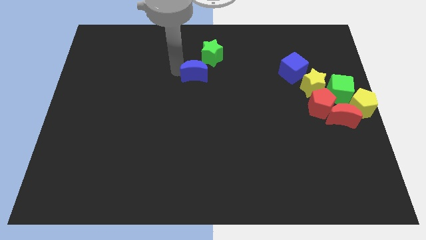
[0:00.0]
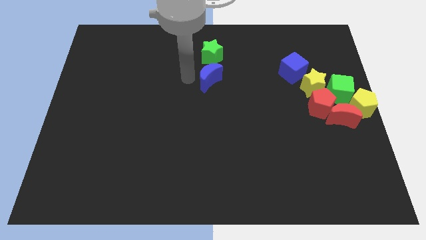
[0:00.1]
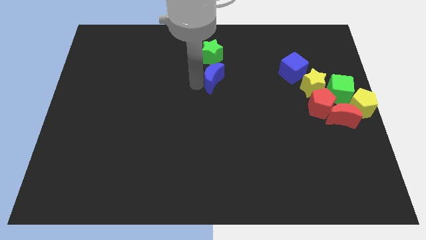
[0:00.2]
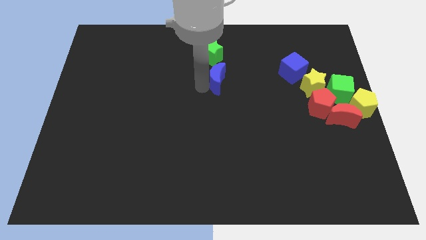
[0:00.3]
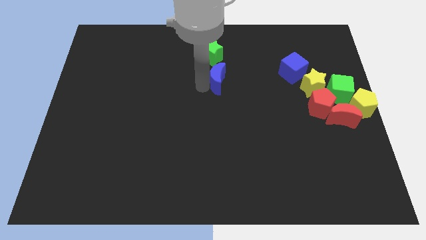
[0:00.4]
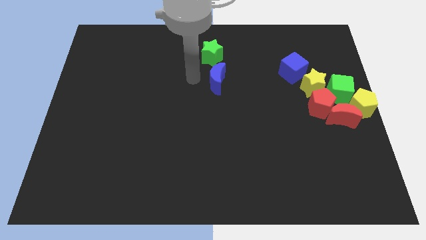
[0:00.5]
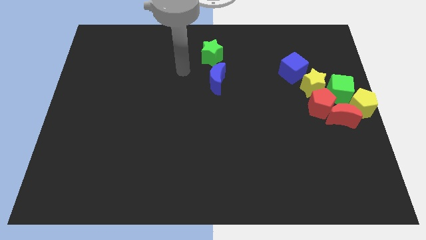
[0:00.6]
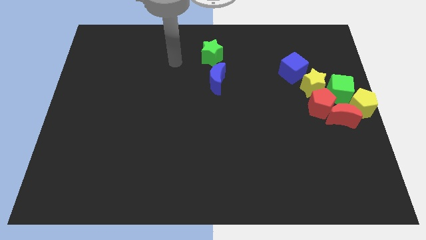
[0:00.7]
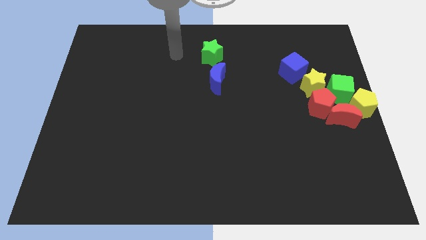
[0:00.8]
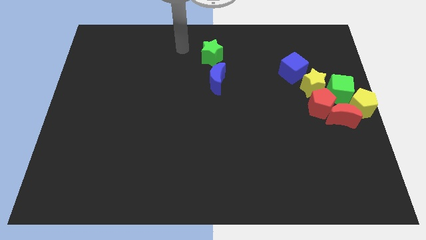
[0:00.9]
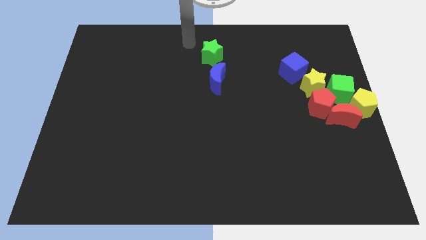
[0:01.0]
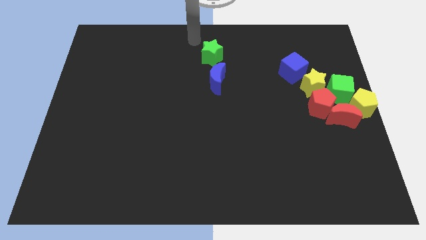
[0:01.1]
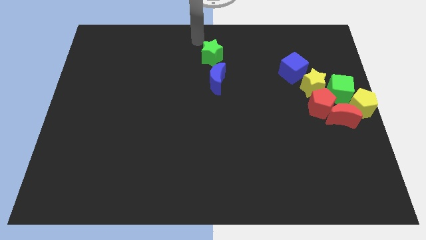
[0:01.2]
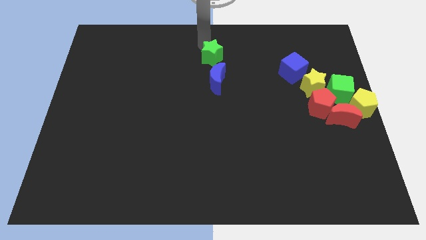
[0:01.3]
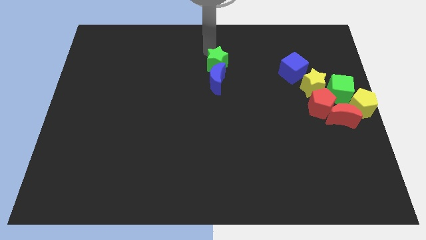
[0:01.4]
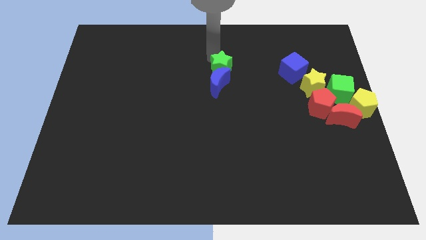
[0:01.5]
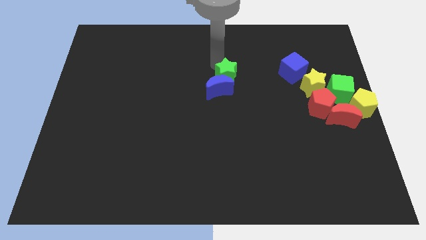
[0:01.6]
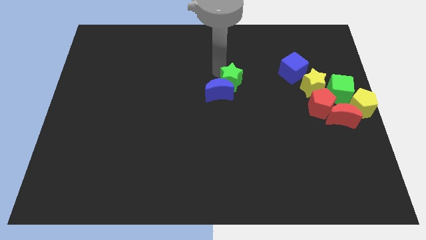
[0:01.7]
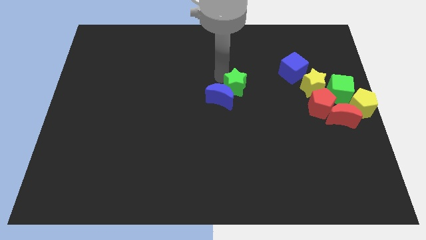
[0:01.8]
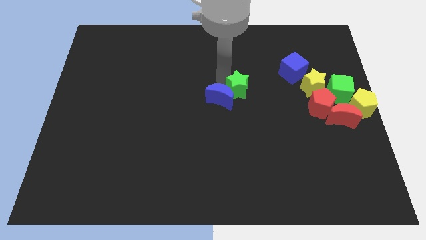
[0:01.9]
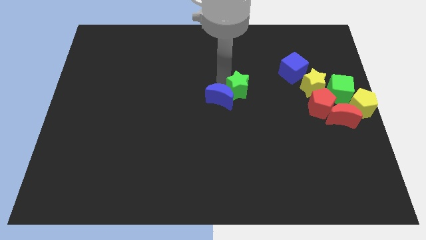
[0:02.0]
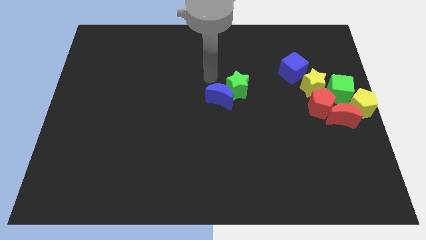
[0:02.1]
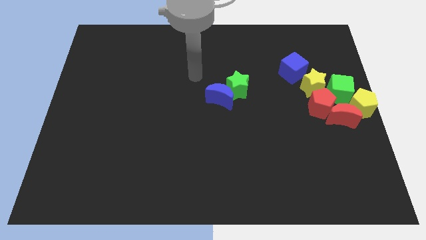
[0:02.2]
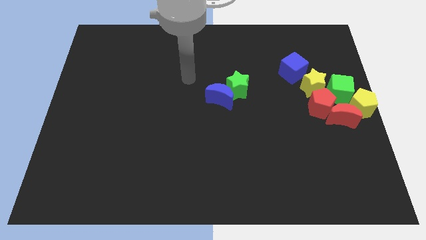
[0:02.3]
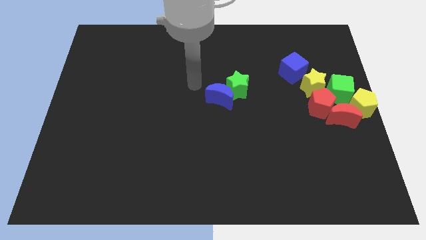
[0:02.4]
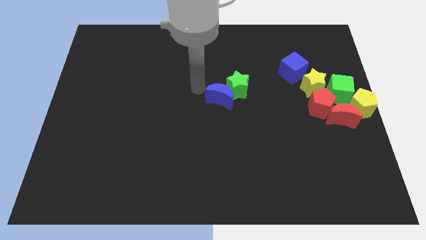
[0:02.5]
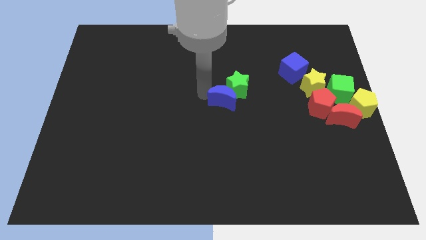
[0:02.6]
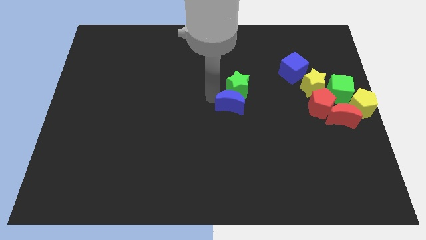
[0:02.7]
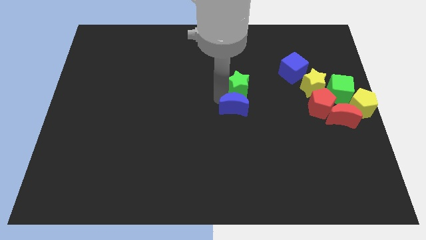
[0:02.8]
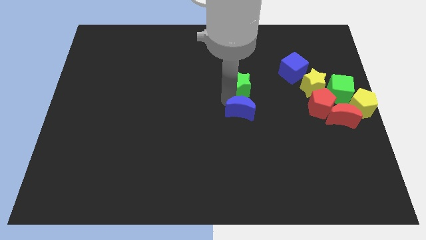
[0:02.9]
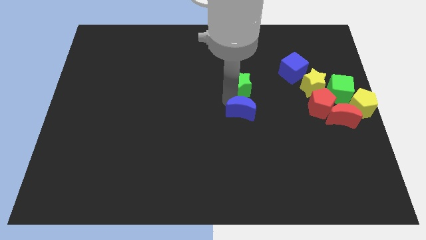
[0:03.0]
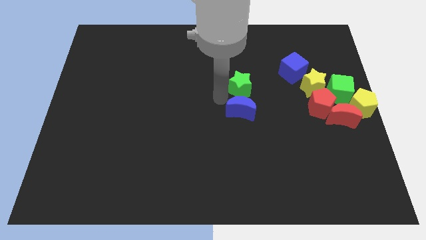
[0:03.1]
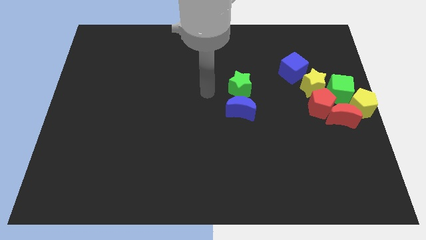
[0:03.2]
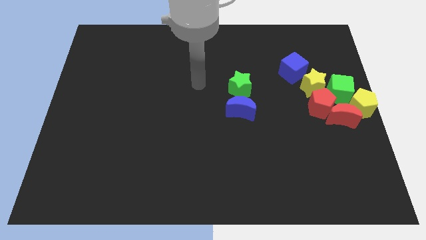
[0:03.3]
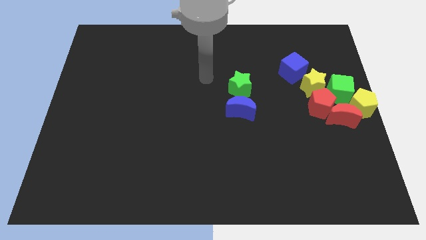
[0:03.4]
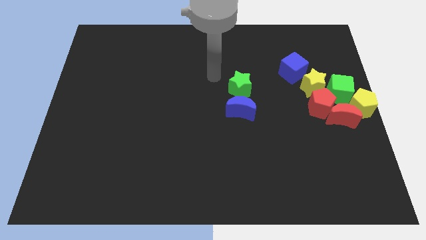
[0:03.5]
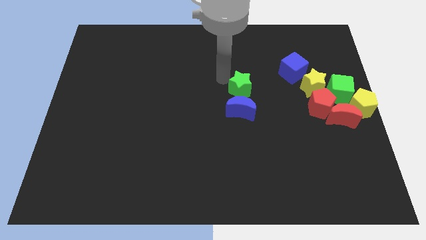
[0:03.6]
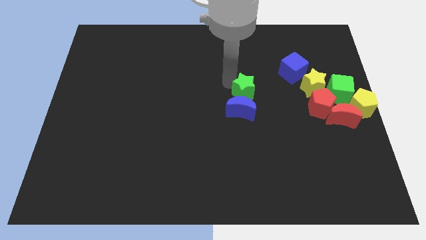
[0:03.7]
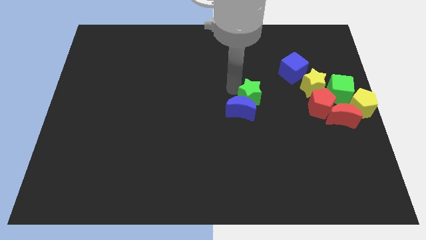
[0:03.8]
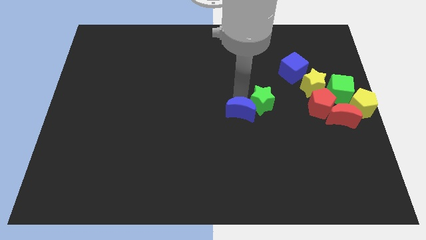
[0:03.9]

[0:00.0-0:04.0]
place the green star to the top of blue crescent at teh center of the board

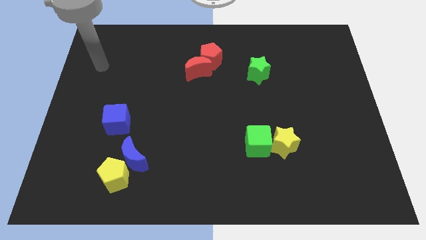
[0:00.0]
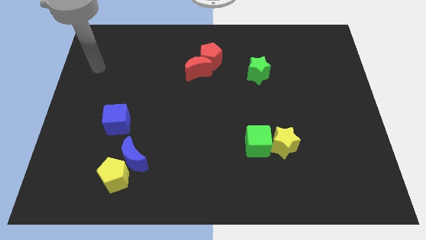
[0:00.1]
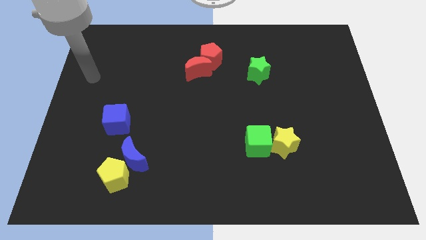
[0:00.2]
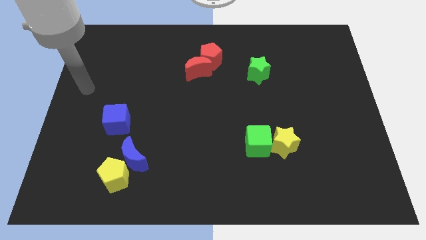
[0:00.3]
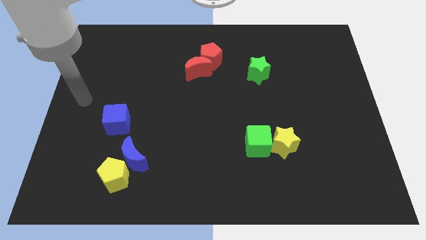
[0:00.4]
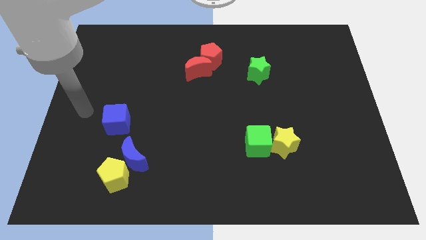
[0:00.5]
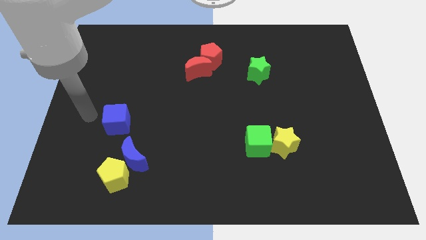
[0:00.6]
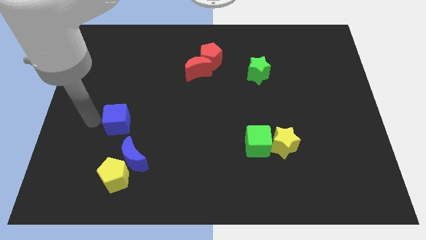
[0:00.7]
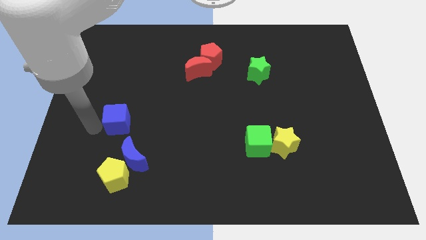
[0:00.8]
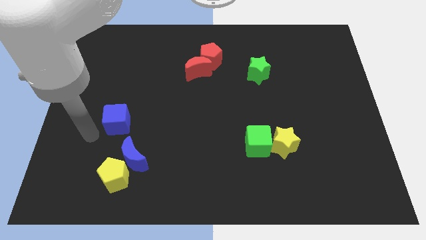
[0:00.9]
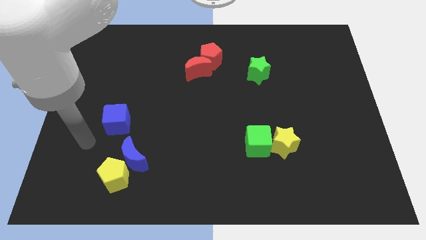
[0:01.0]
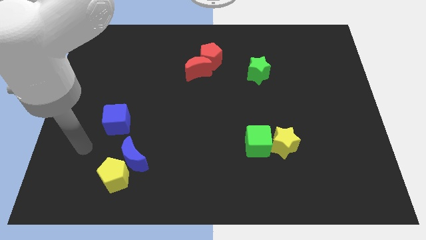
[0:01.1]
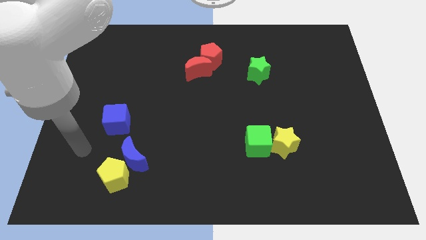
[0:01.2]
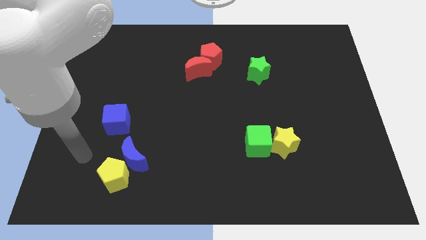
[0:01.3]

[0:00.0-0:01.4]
put your arm diagonally bottom left to the blue cube

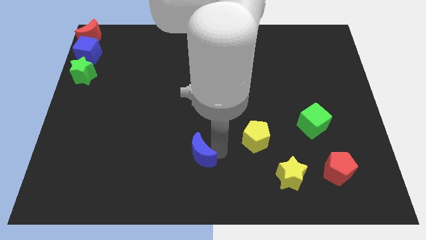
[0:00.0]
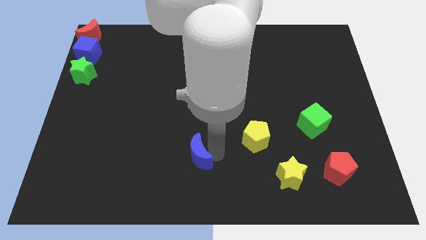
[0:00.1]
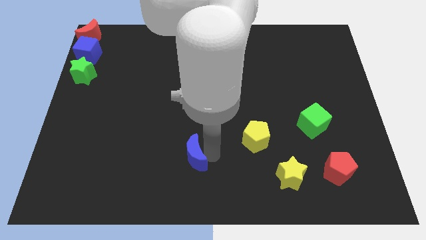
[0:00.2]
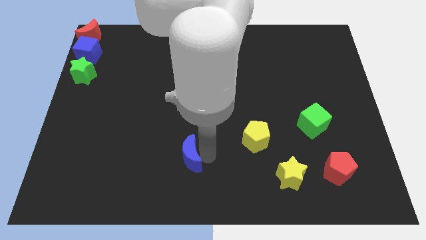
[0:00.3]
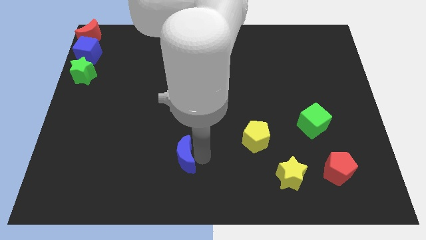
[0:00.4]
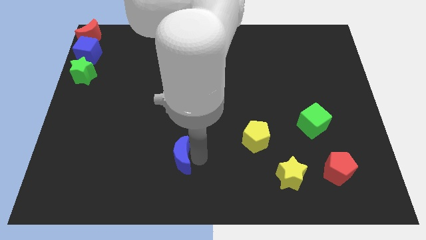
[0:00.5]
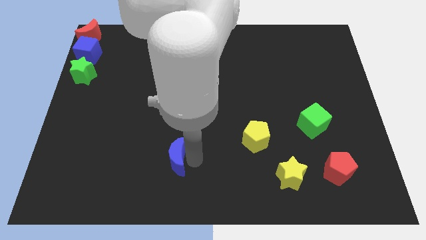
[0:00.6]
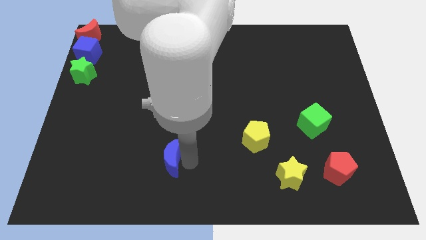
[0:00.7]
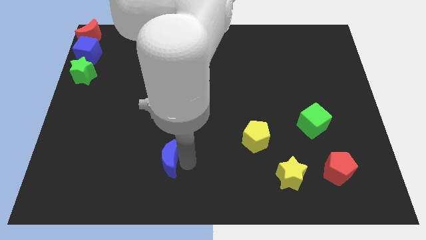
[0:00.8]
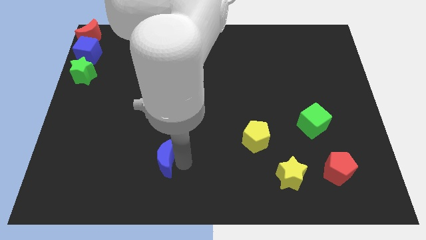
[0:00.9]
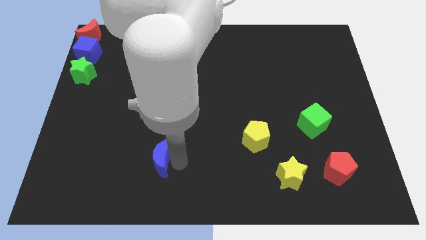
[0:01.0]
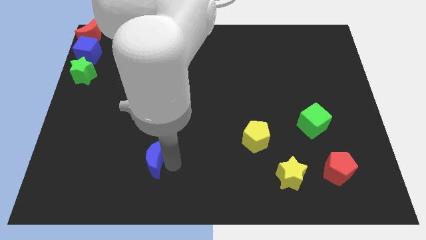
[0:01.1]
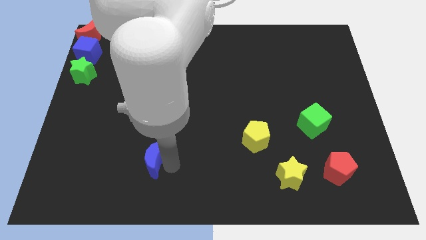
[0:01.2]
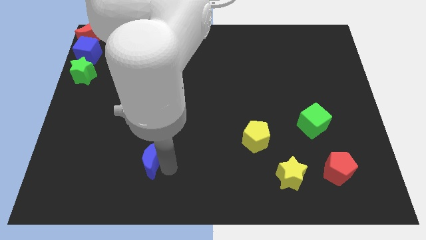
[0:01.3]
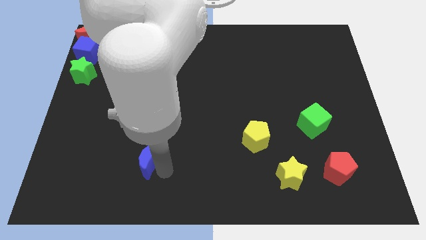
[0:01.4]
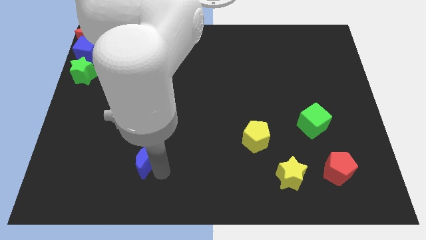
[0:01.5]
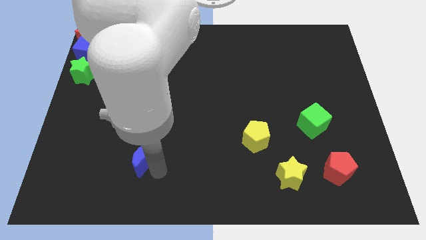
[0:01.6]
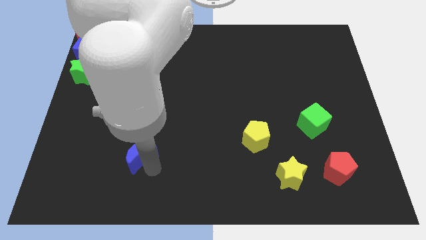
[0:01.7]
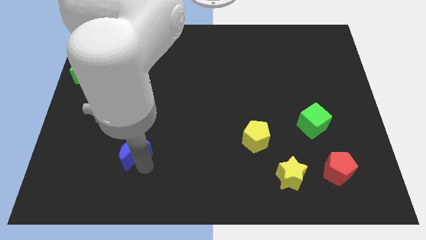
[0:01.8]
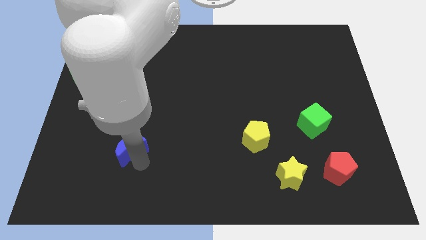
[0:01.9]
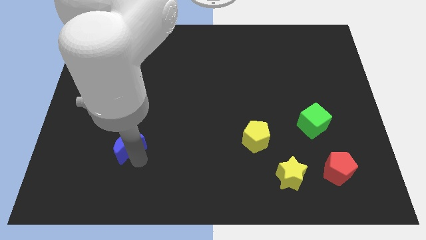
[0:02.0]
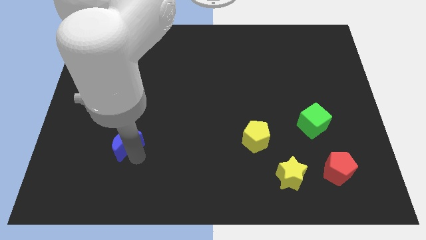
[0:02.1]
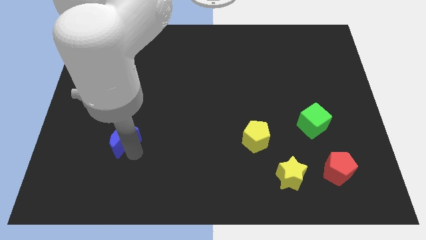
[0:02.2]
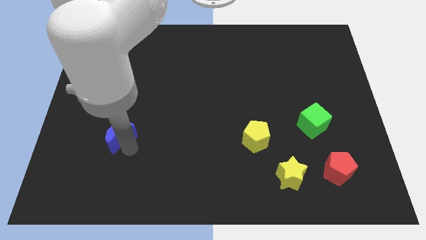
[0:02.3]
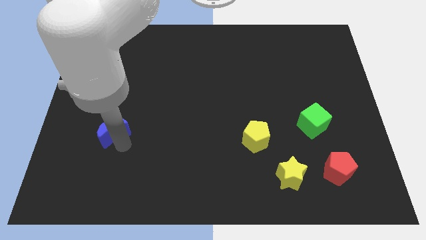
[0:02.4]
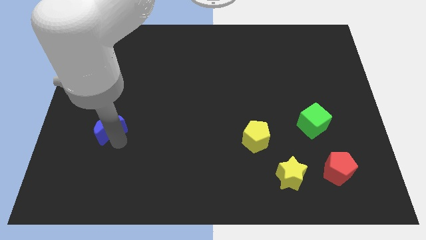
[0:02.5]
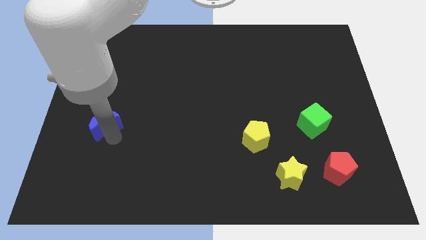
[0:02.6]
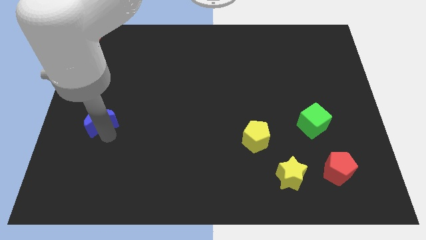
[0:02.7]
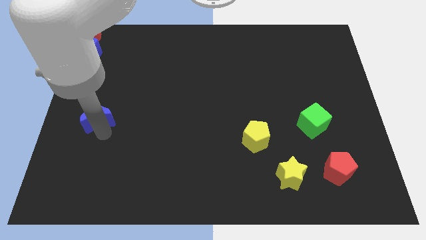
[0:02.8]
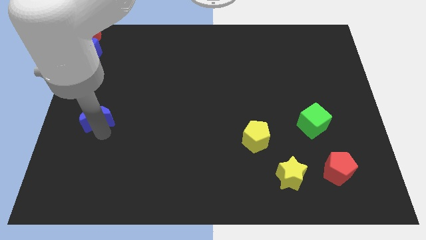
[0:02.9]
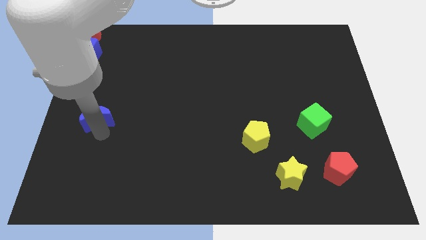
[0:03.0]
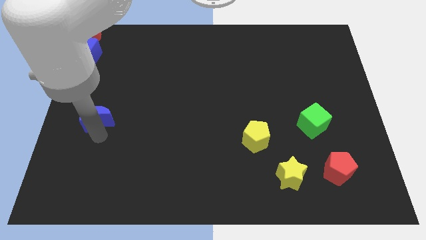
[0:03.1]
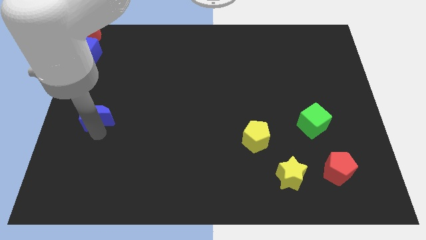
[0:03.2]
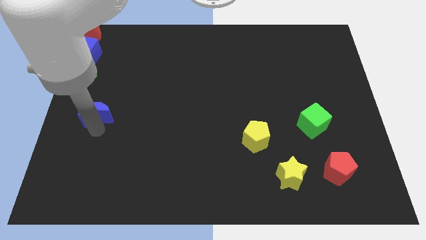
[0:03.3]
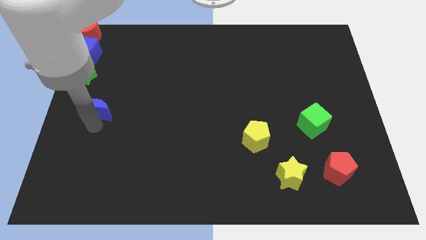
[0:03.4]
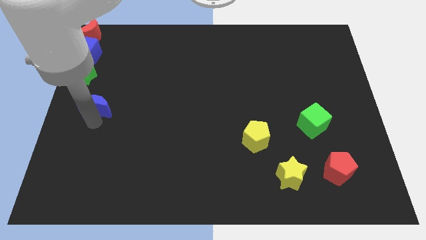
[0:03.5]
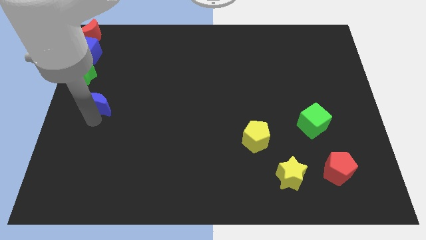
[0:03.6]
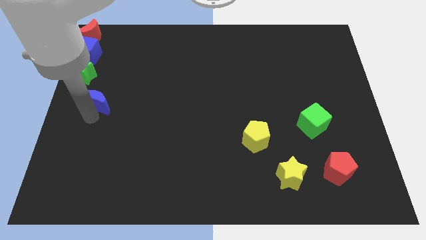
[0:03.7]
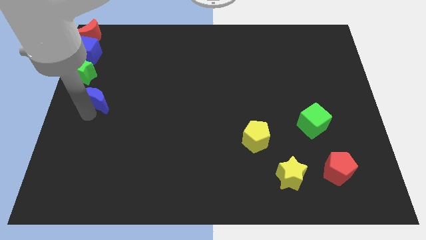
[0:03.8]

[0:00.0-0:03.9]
push the blue moon to the left side of the board
